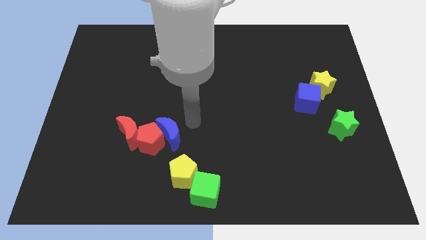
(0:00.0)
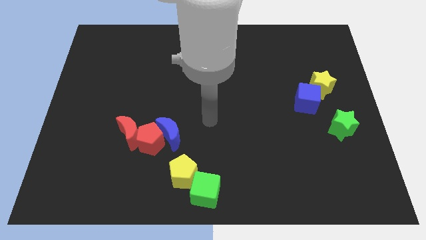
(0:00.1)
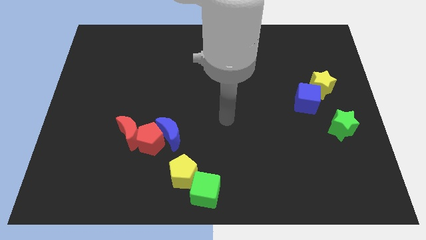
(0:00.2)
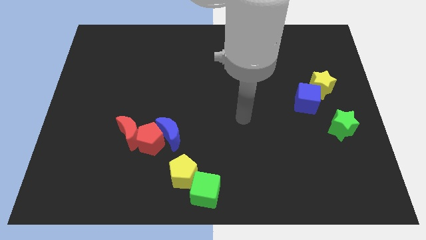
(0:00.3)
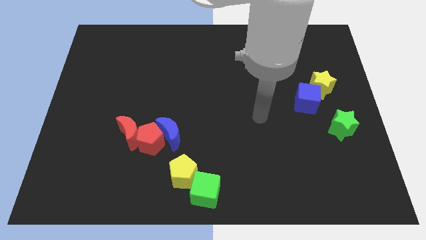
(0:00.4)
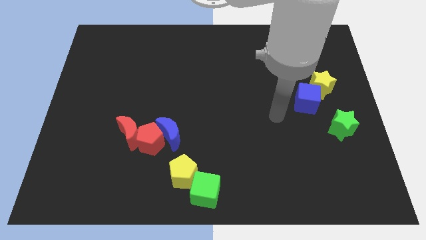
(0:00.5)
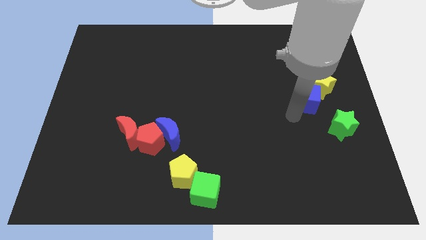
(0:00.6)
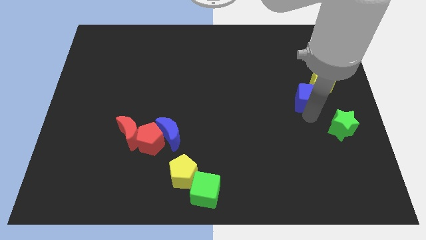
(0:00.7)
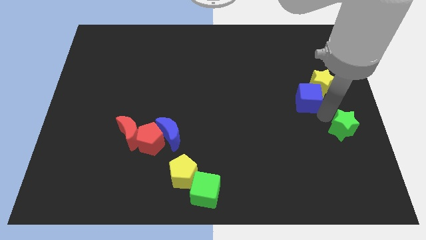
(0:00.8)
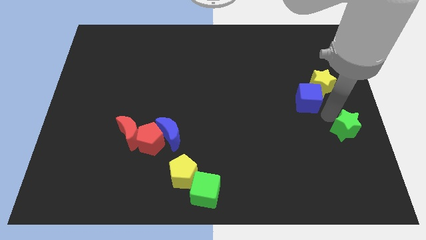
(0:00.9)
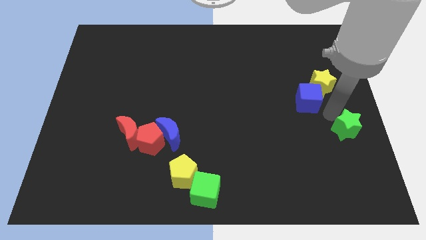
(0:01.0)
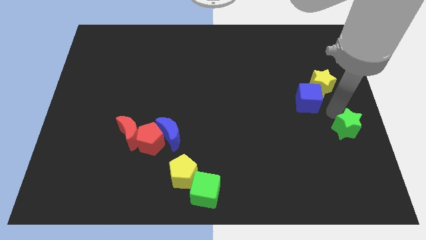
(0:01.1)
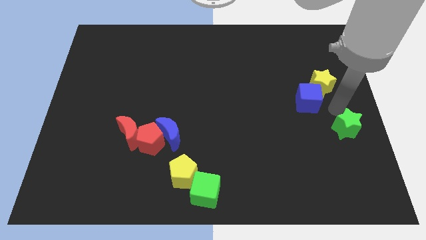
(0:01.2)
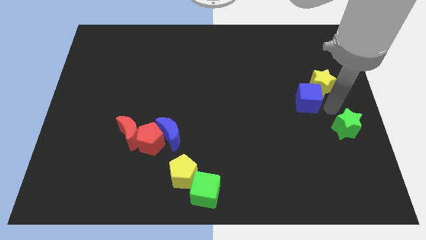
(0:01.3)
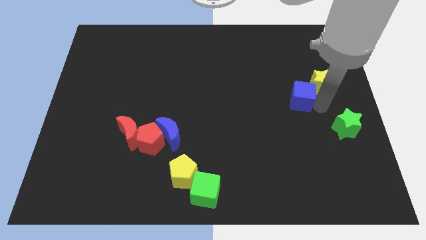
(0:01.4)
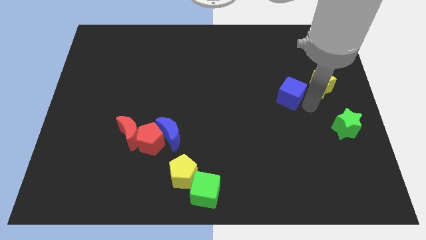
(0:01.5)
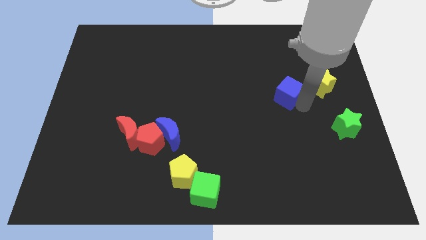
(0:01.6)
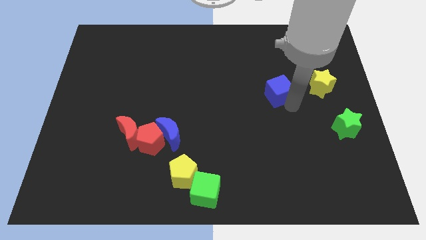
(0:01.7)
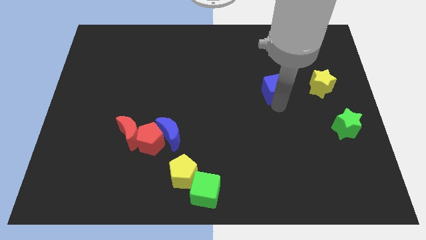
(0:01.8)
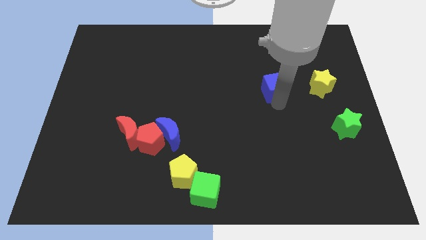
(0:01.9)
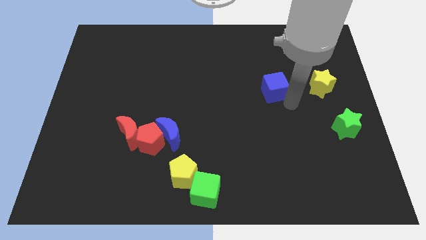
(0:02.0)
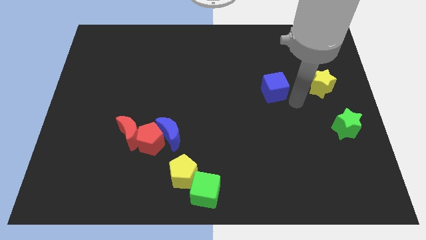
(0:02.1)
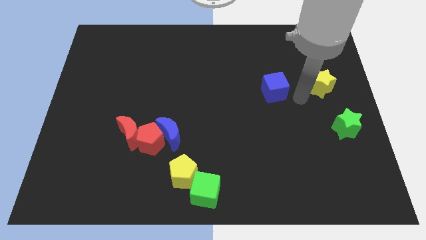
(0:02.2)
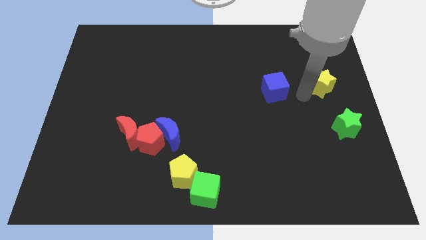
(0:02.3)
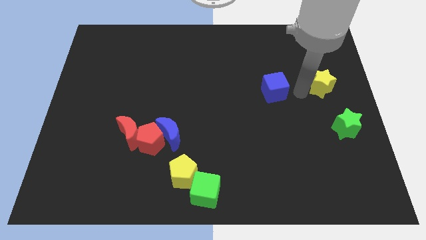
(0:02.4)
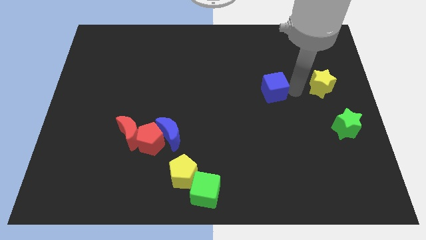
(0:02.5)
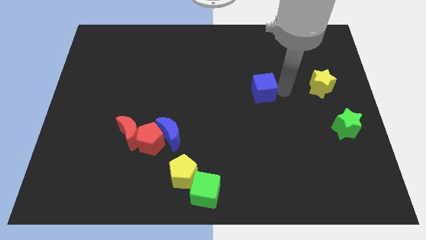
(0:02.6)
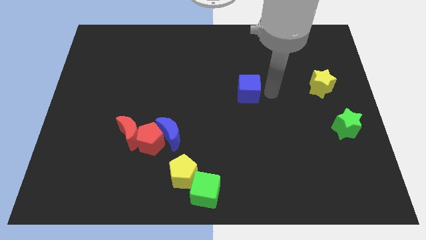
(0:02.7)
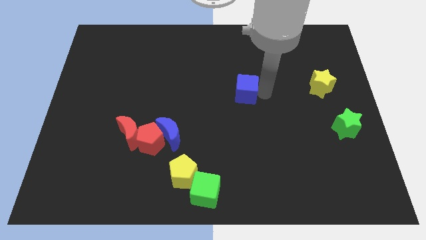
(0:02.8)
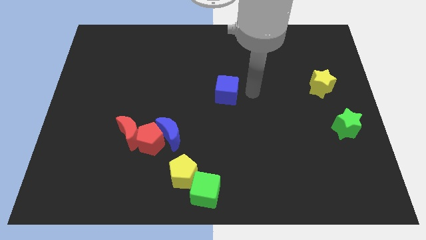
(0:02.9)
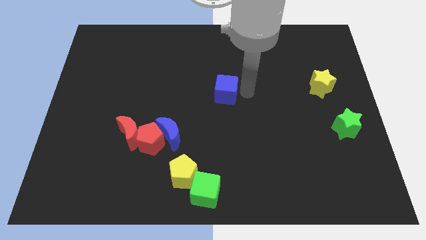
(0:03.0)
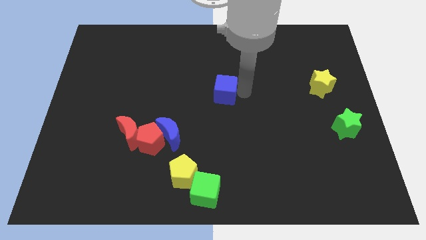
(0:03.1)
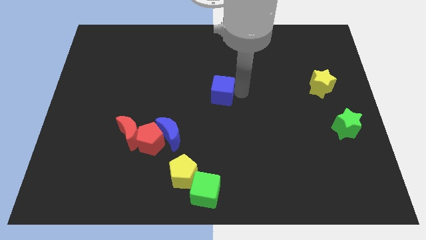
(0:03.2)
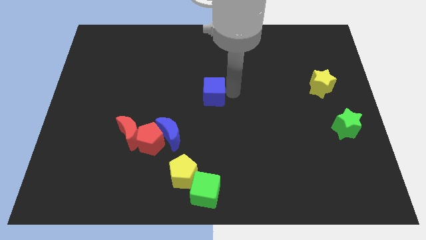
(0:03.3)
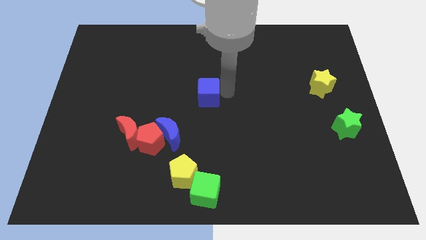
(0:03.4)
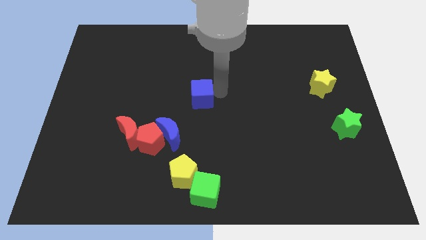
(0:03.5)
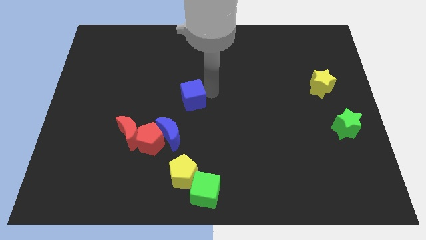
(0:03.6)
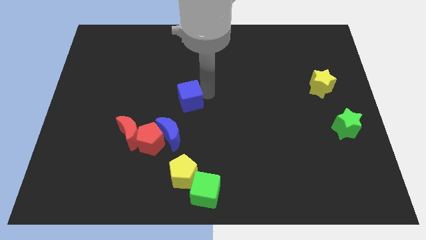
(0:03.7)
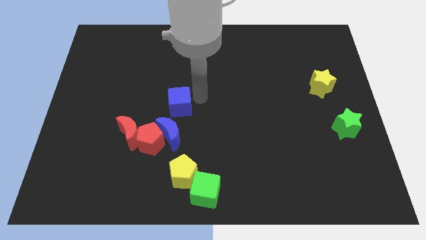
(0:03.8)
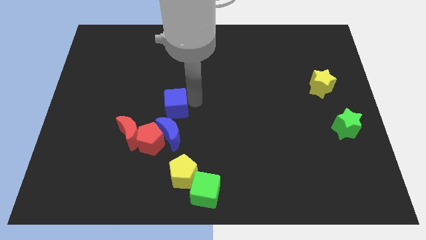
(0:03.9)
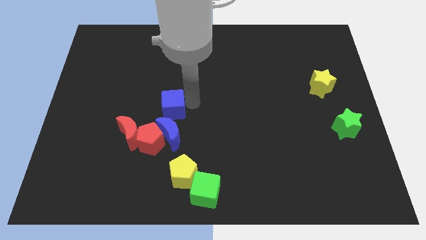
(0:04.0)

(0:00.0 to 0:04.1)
move the blue cube to the top of the blue crescent

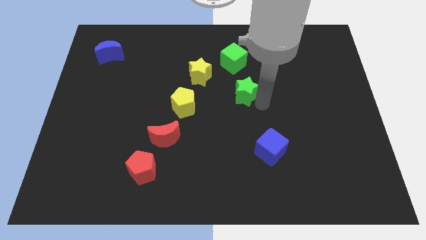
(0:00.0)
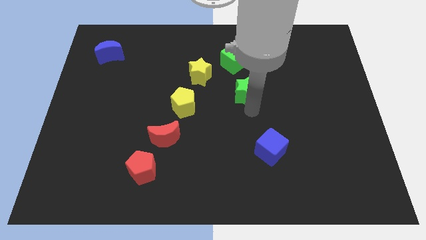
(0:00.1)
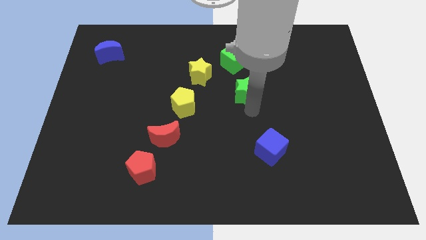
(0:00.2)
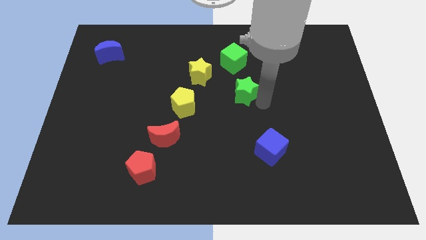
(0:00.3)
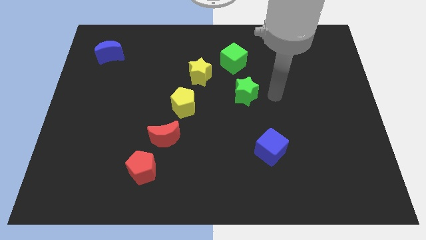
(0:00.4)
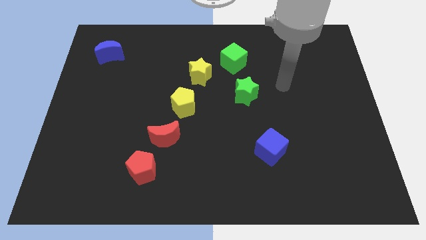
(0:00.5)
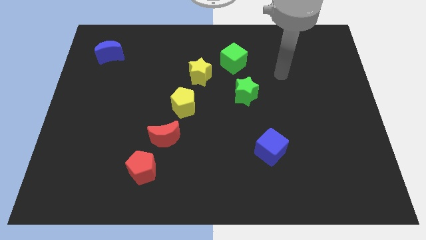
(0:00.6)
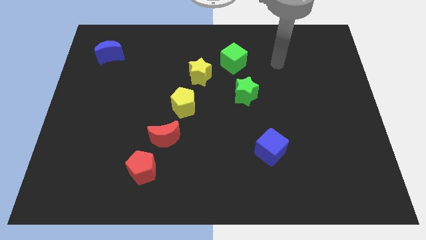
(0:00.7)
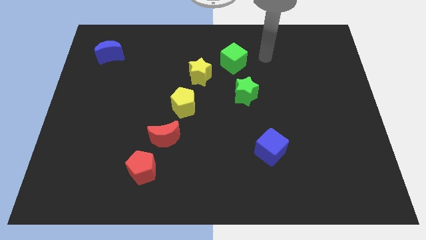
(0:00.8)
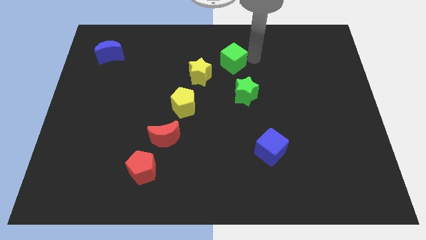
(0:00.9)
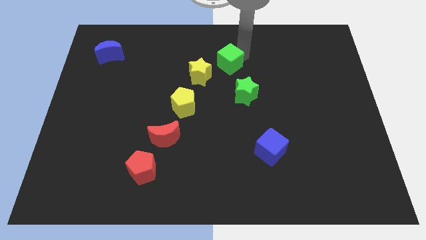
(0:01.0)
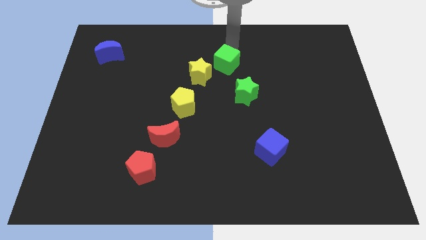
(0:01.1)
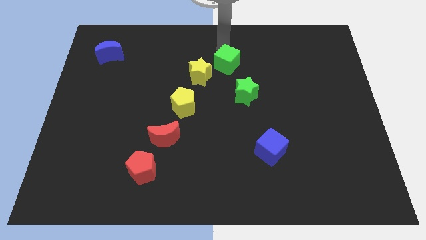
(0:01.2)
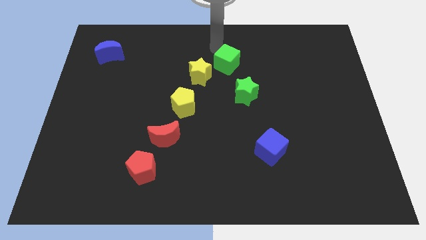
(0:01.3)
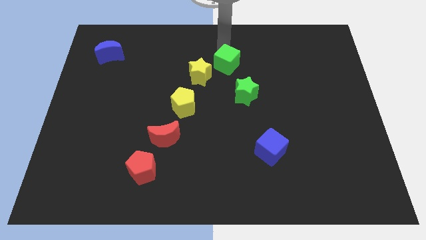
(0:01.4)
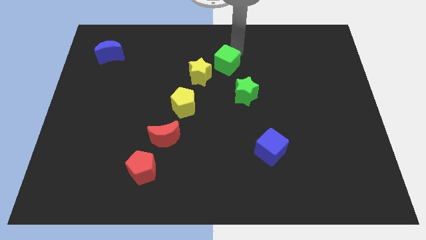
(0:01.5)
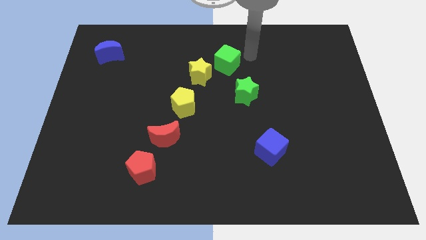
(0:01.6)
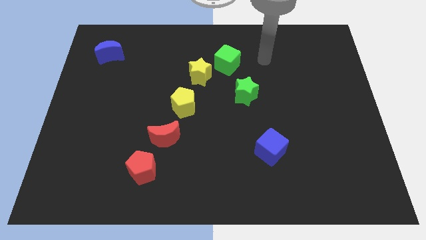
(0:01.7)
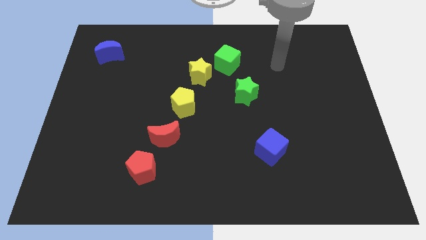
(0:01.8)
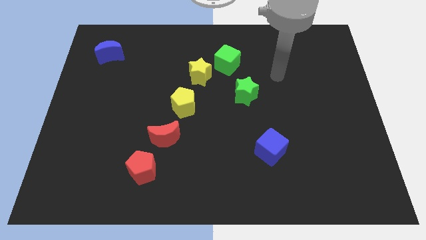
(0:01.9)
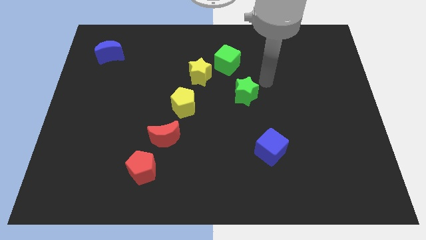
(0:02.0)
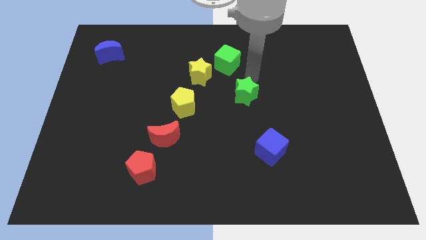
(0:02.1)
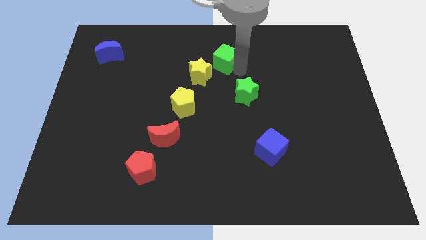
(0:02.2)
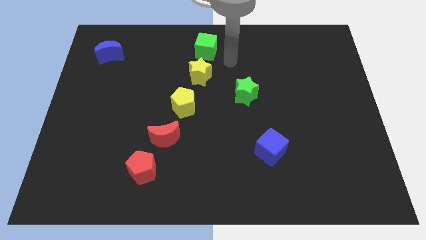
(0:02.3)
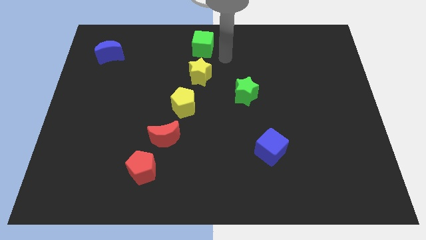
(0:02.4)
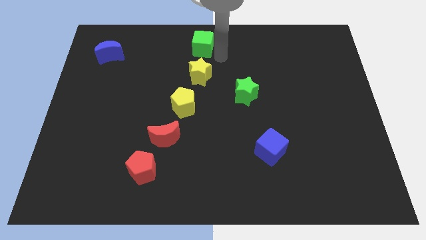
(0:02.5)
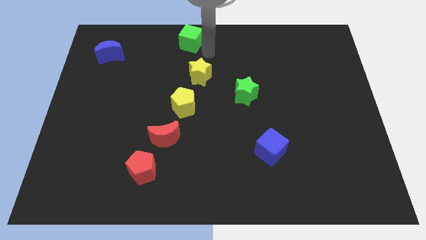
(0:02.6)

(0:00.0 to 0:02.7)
place the green cube to the top of the yellow star

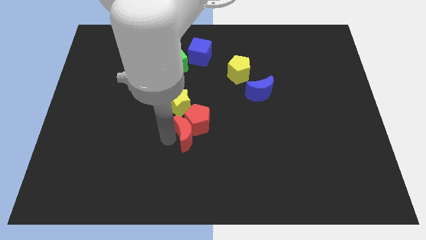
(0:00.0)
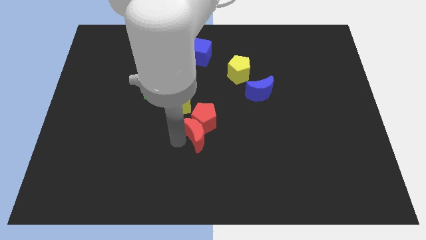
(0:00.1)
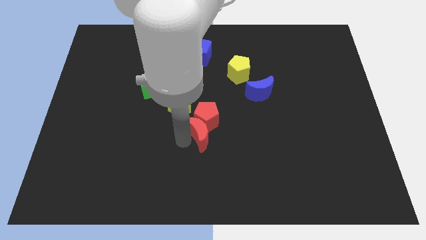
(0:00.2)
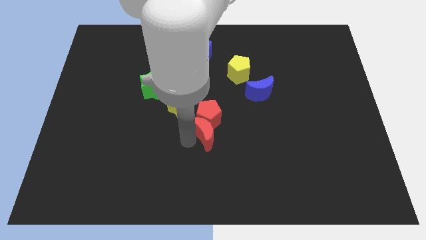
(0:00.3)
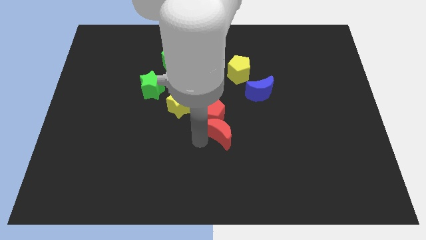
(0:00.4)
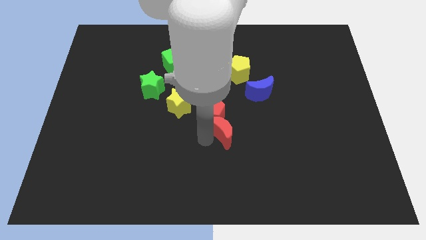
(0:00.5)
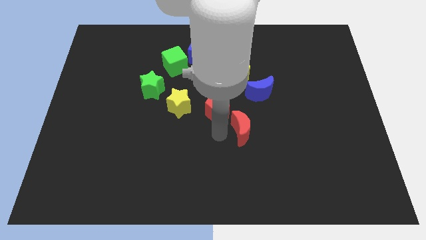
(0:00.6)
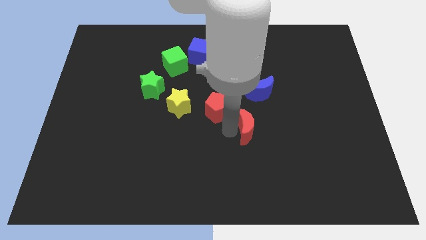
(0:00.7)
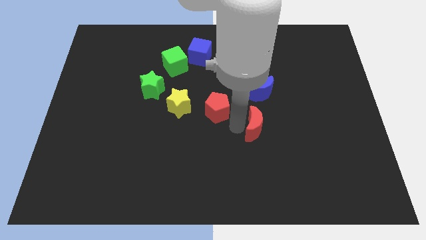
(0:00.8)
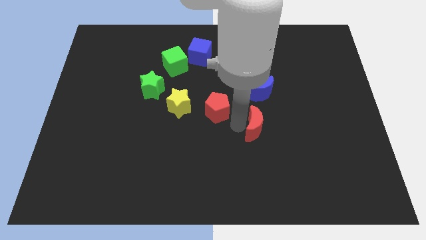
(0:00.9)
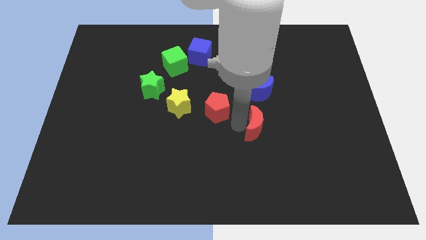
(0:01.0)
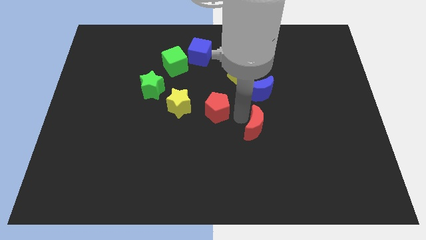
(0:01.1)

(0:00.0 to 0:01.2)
separate the red pentagon and red moon

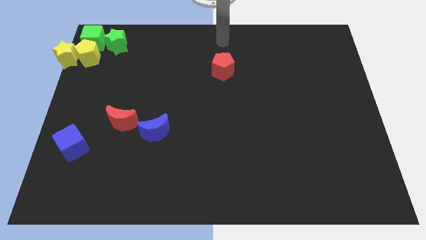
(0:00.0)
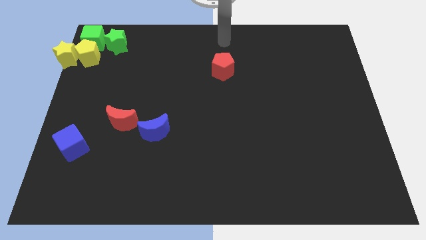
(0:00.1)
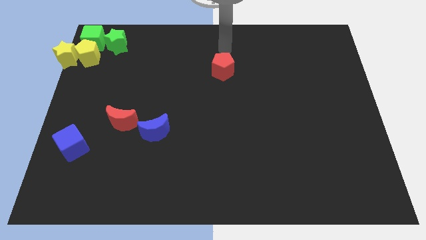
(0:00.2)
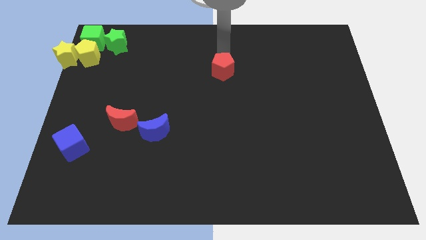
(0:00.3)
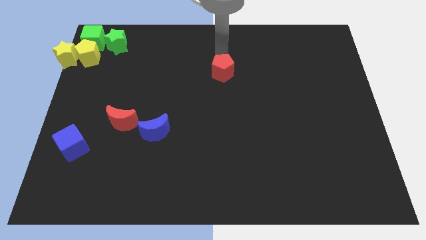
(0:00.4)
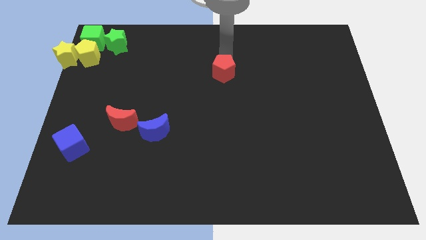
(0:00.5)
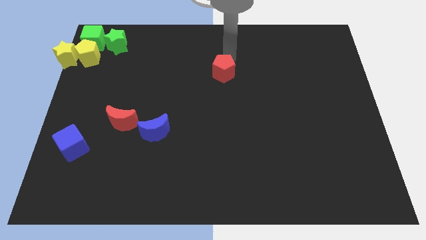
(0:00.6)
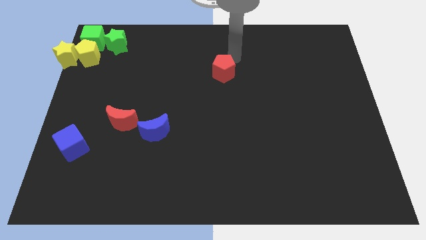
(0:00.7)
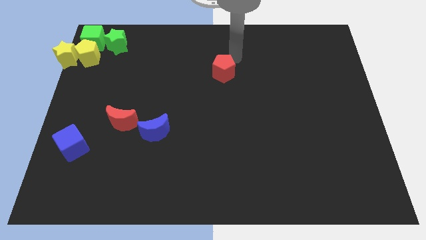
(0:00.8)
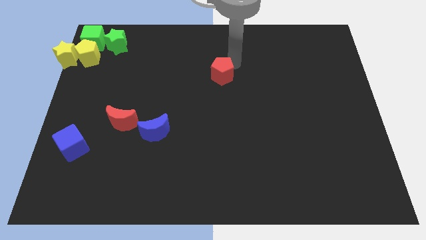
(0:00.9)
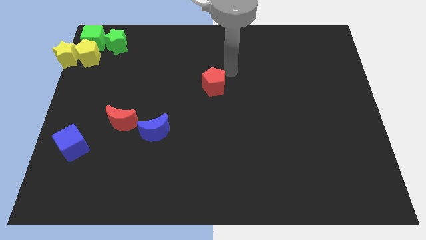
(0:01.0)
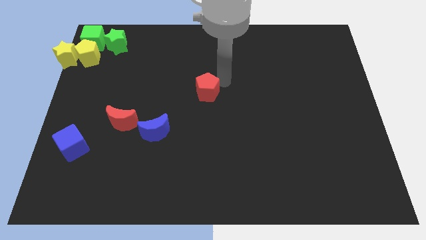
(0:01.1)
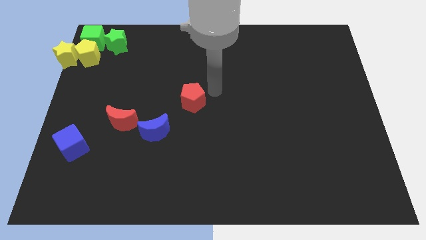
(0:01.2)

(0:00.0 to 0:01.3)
put the red pentagon at the center of the board
